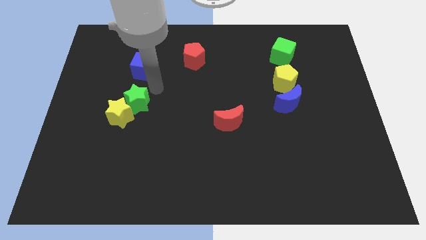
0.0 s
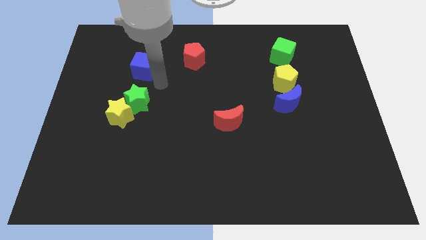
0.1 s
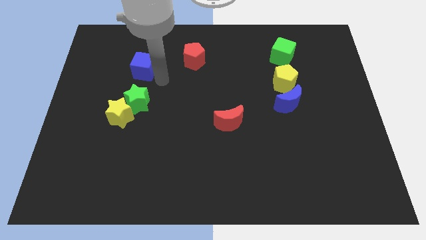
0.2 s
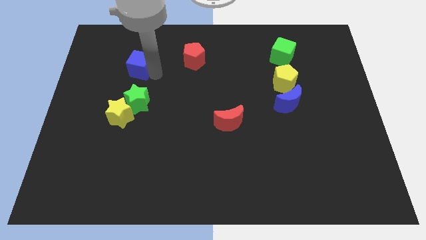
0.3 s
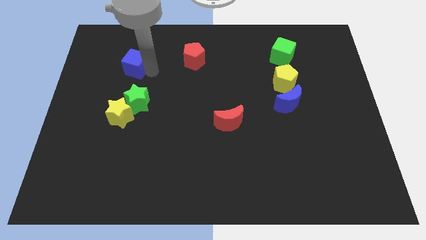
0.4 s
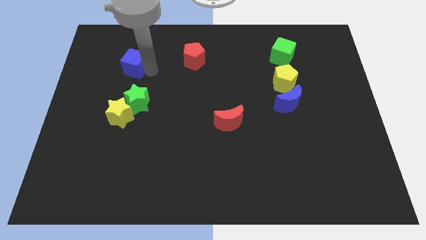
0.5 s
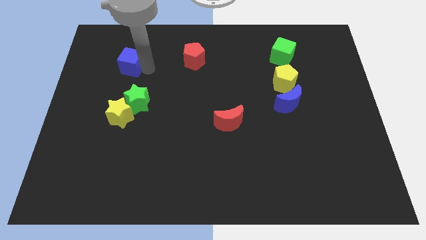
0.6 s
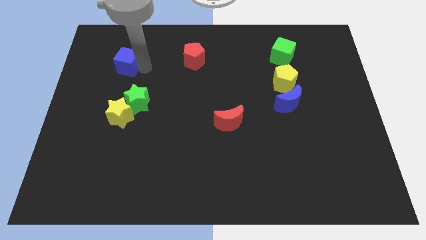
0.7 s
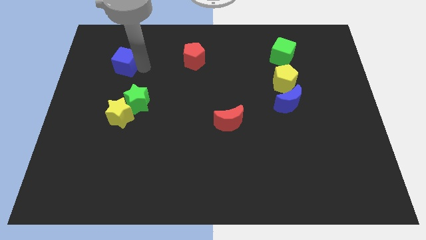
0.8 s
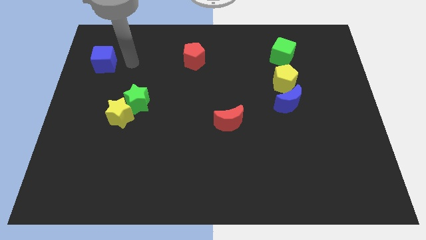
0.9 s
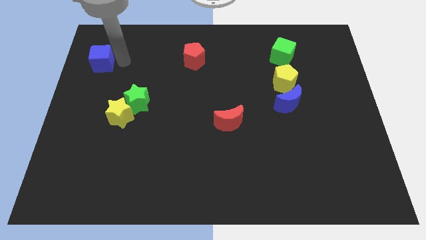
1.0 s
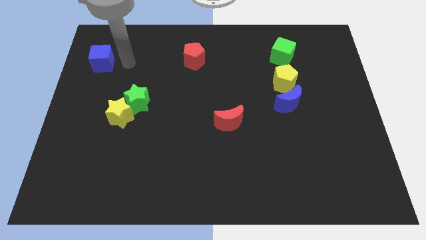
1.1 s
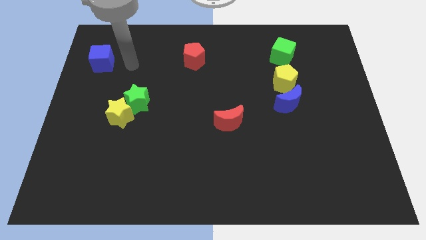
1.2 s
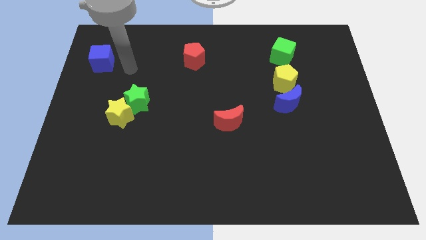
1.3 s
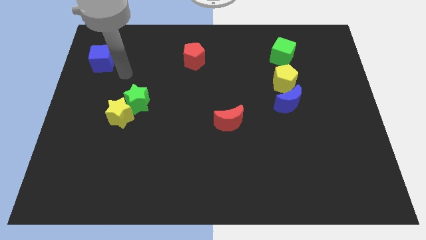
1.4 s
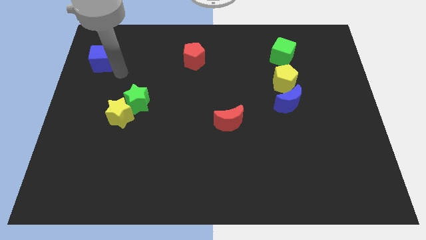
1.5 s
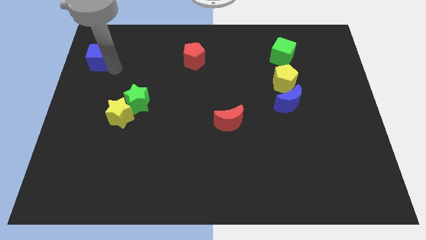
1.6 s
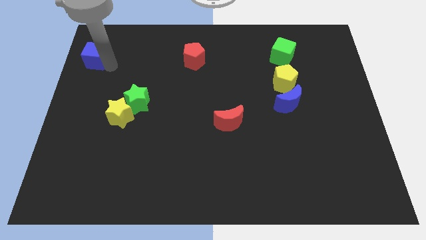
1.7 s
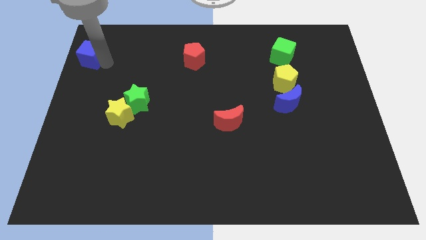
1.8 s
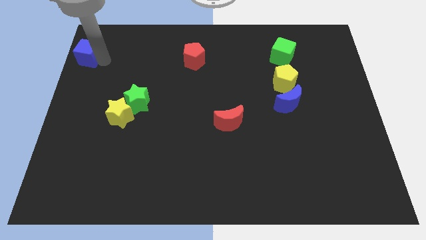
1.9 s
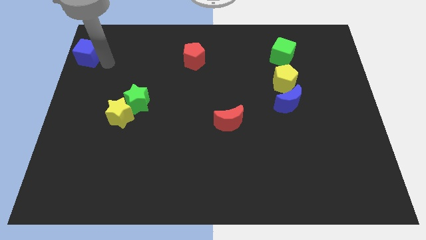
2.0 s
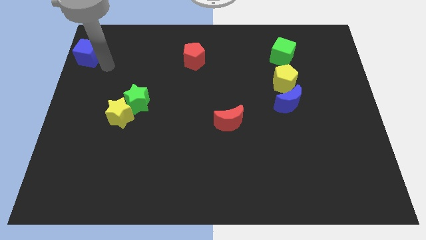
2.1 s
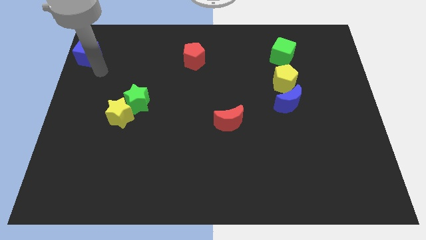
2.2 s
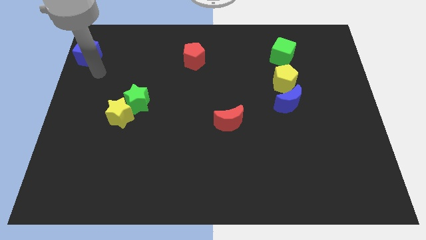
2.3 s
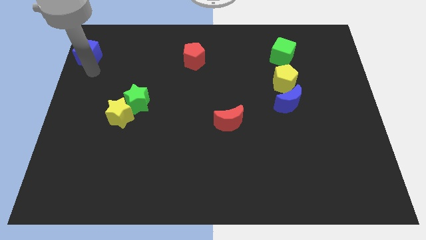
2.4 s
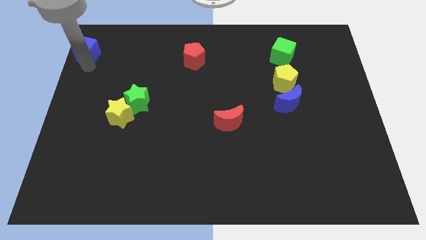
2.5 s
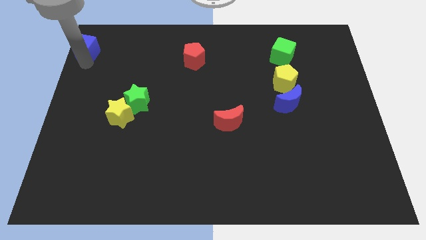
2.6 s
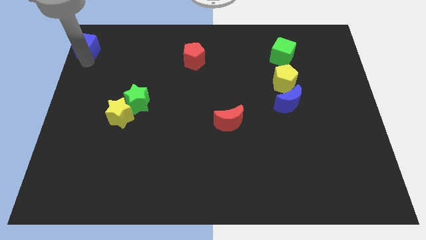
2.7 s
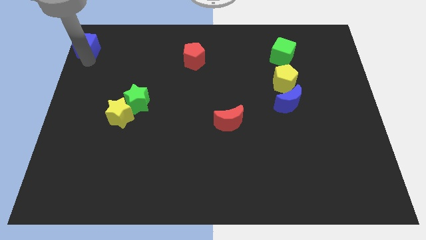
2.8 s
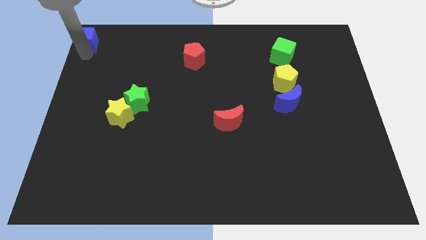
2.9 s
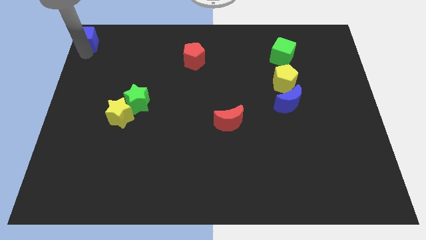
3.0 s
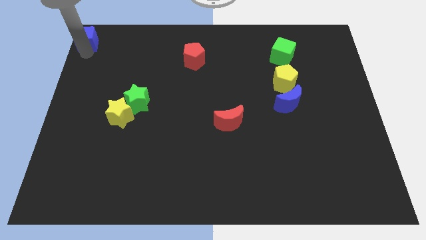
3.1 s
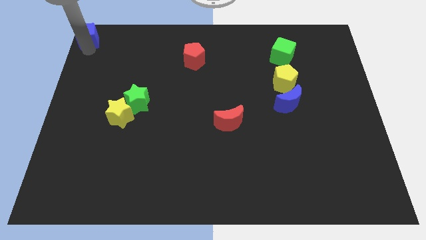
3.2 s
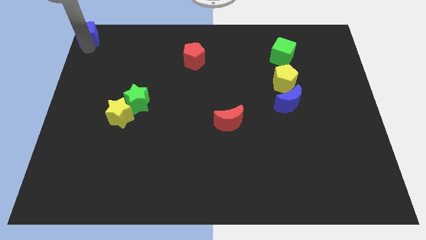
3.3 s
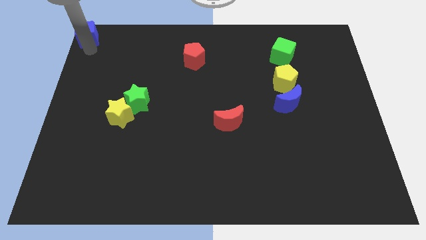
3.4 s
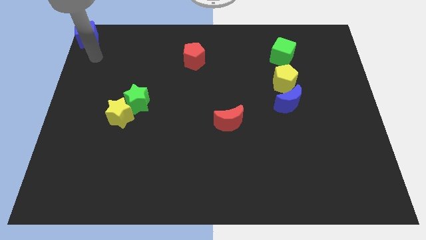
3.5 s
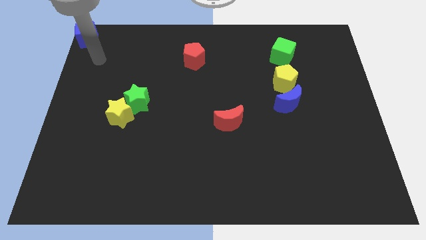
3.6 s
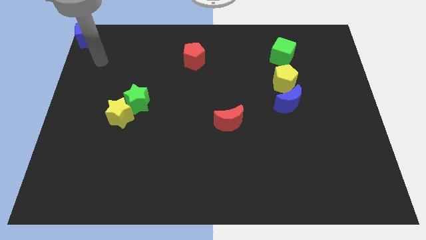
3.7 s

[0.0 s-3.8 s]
push the blue cube to the top left corner of the board

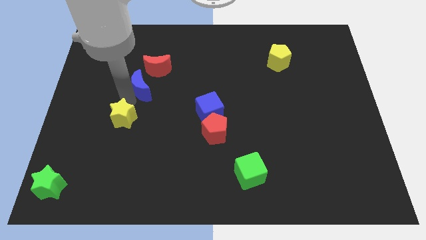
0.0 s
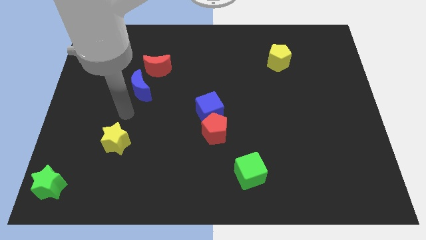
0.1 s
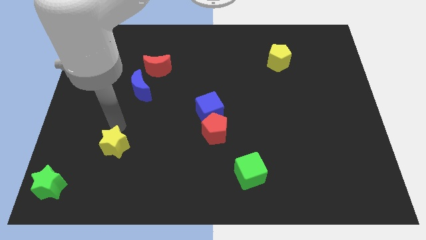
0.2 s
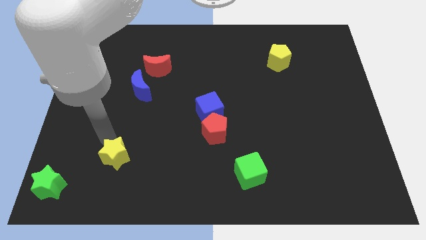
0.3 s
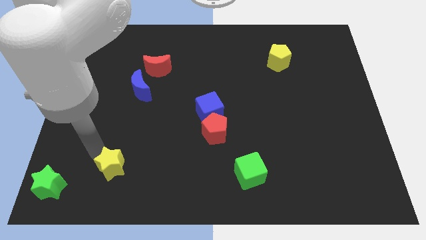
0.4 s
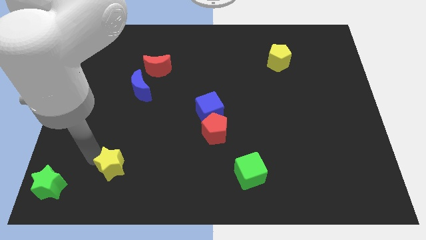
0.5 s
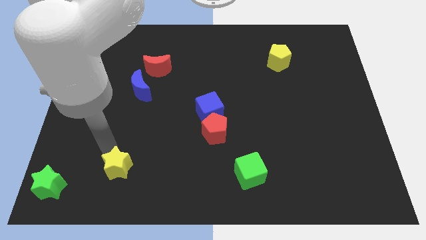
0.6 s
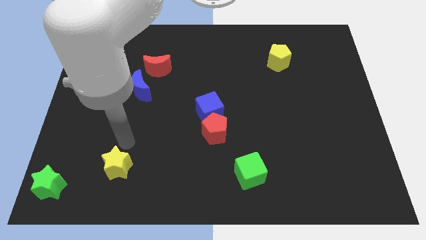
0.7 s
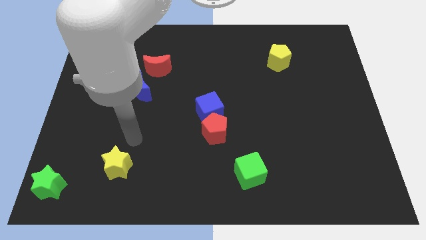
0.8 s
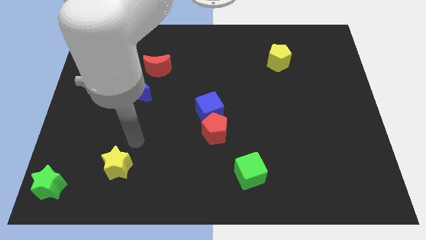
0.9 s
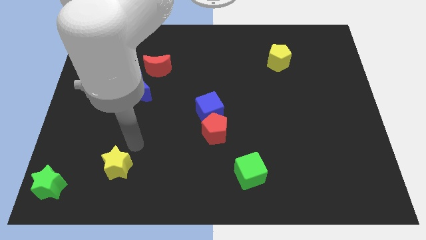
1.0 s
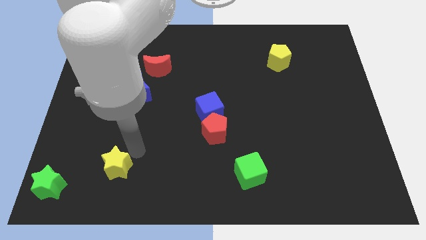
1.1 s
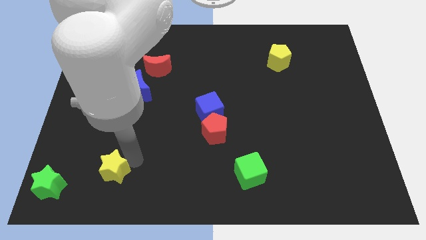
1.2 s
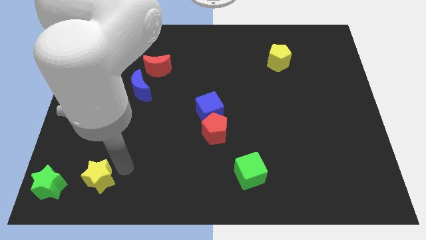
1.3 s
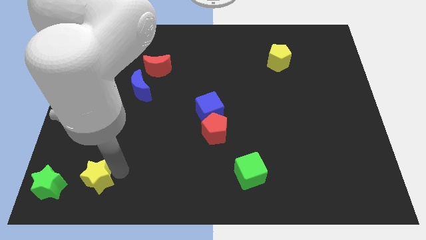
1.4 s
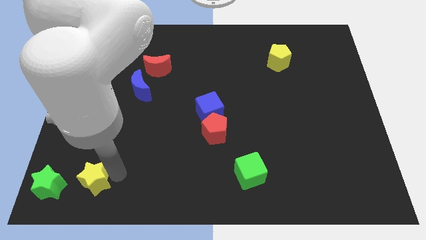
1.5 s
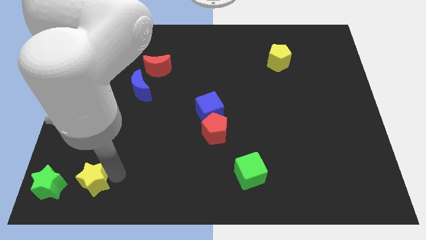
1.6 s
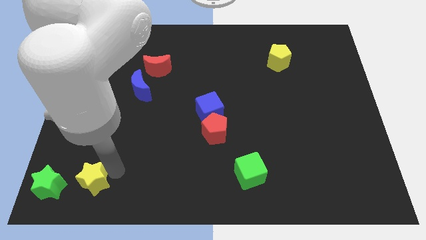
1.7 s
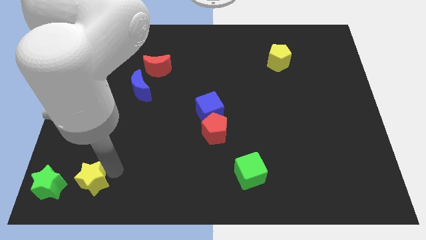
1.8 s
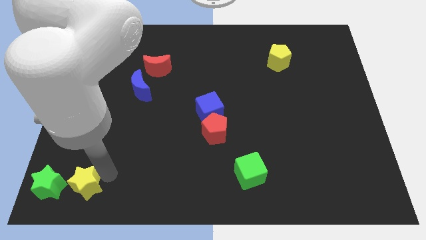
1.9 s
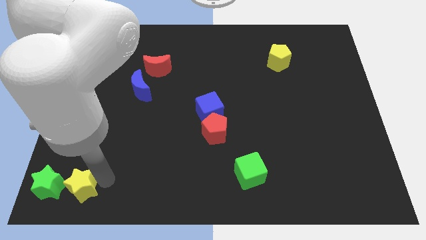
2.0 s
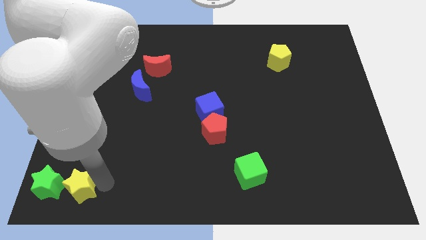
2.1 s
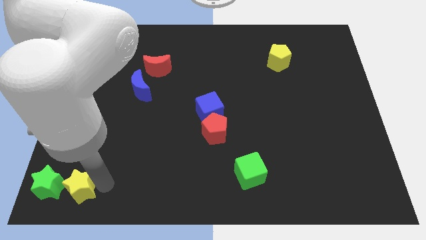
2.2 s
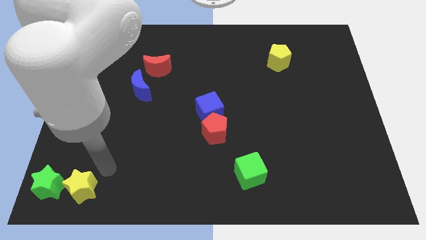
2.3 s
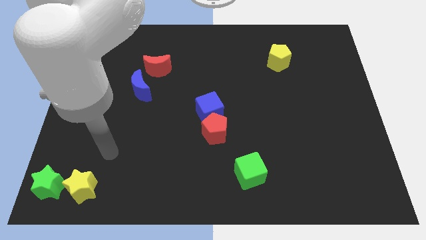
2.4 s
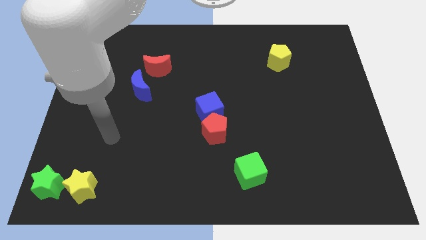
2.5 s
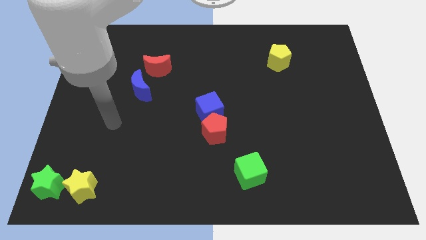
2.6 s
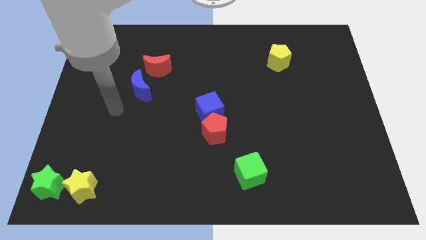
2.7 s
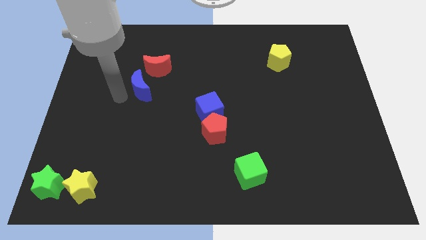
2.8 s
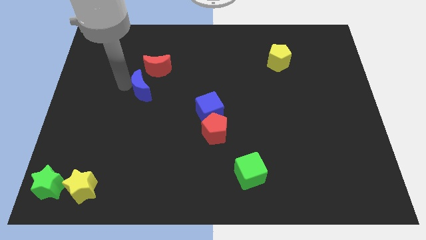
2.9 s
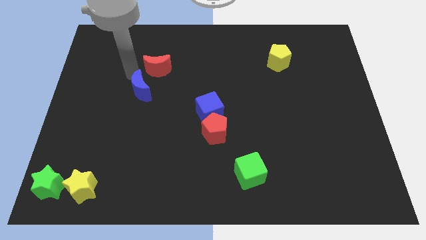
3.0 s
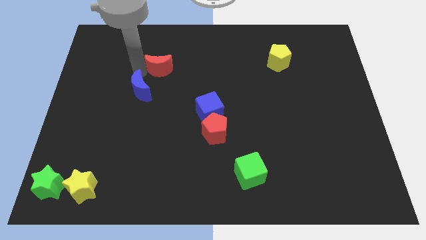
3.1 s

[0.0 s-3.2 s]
place the yellow star parallel right to the green star

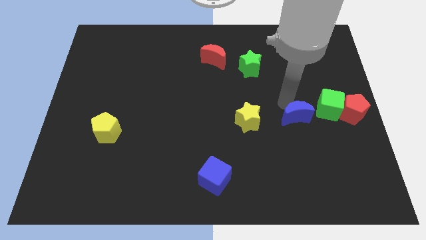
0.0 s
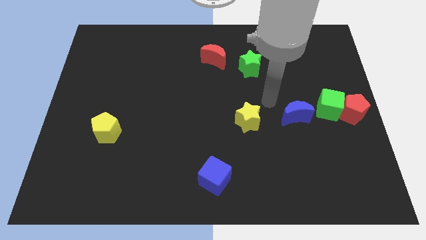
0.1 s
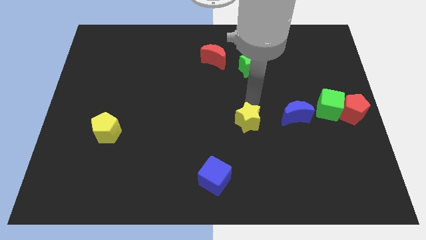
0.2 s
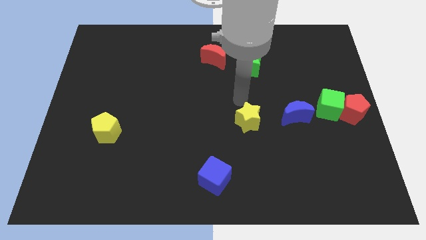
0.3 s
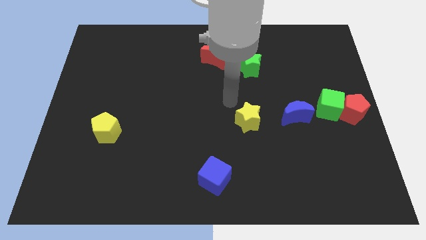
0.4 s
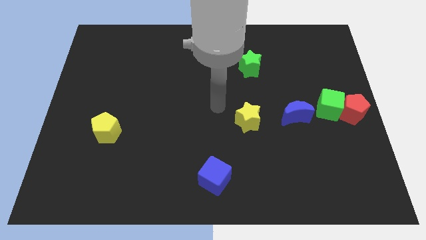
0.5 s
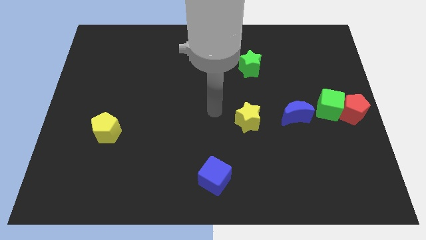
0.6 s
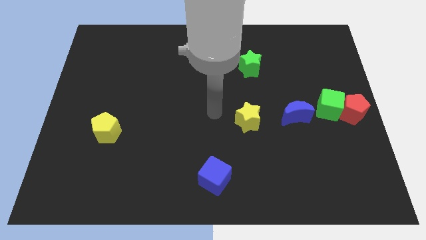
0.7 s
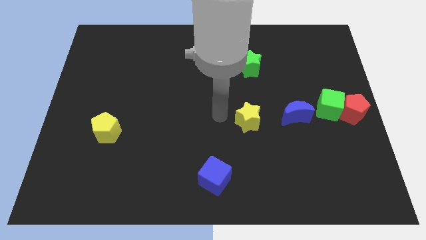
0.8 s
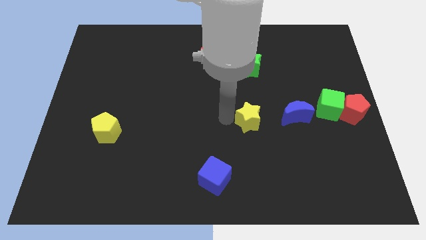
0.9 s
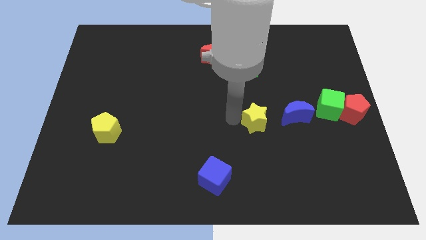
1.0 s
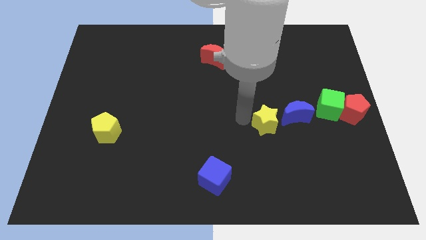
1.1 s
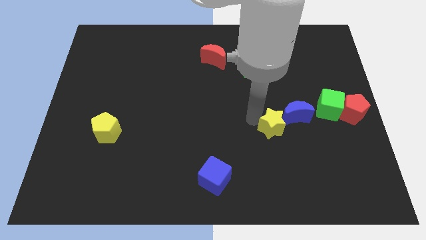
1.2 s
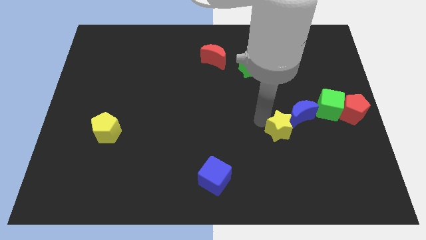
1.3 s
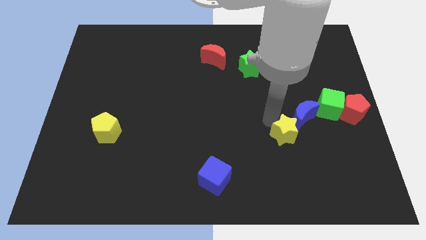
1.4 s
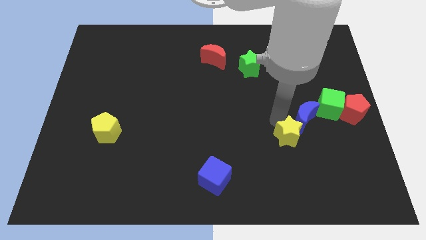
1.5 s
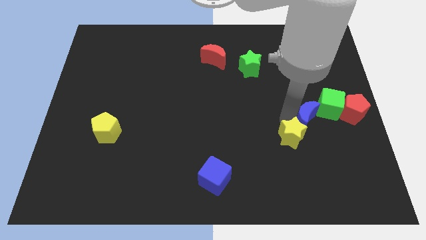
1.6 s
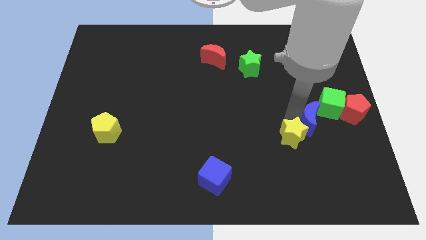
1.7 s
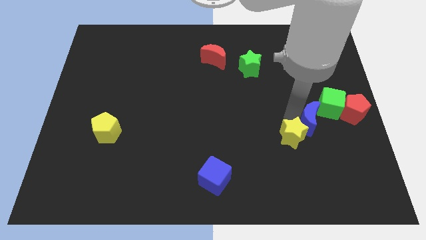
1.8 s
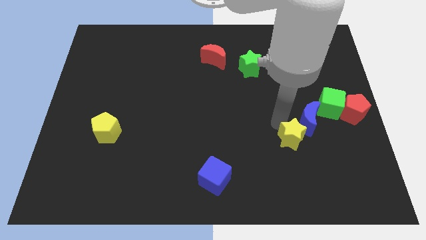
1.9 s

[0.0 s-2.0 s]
push the yellow star into the blue moon
